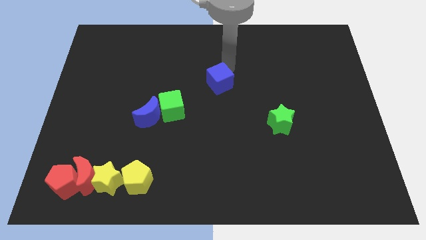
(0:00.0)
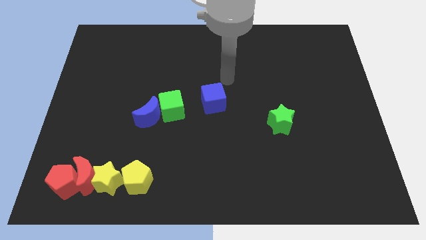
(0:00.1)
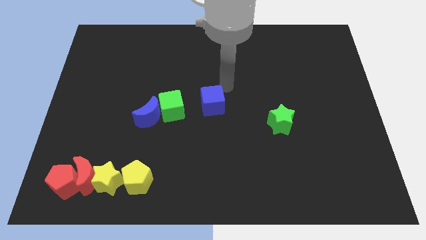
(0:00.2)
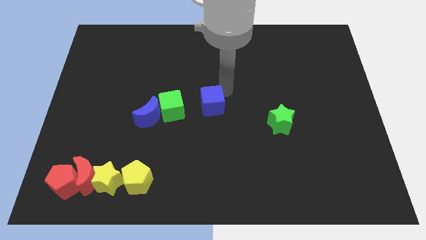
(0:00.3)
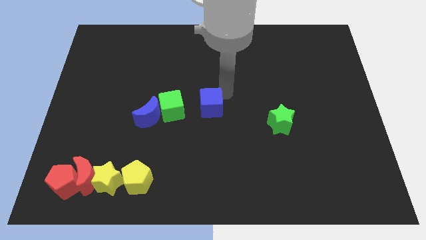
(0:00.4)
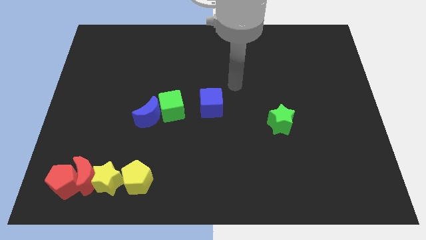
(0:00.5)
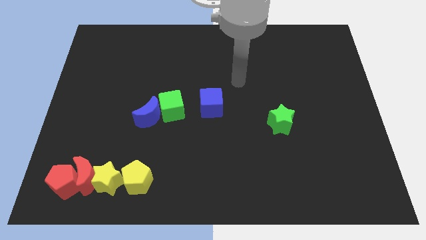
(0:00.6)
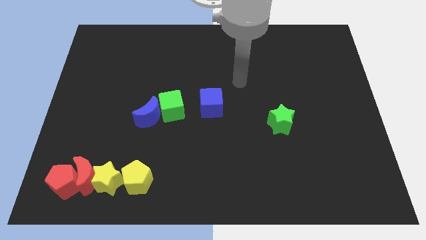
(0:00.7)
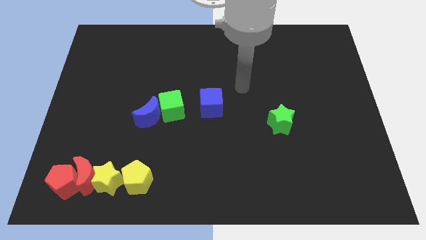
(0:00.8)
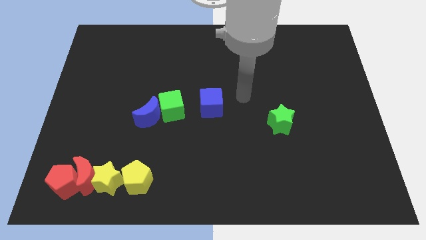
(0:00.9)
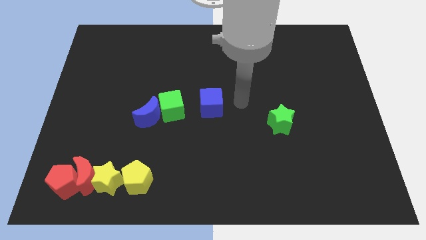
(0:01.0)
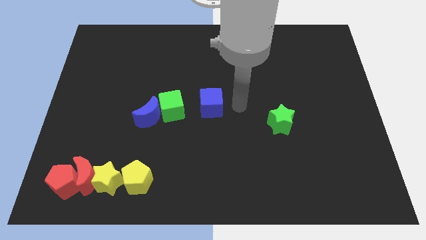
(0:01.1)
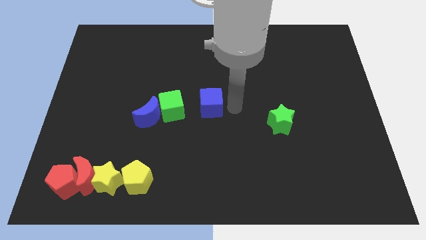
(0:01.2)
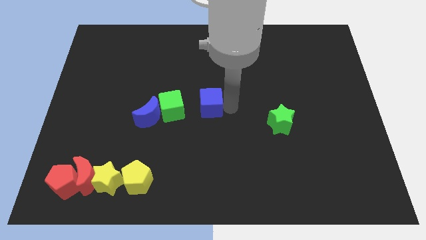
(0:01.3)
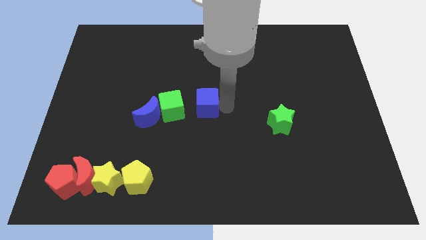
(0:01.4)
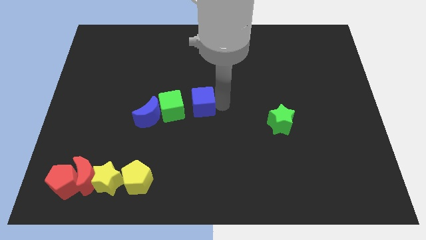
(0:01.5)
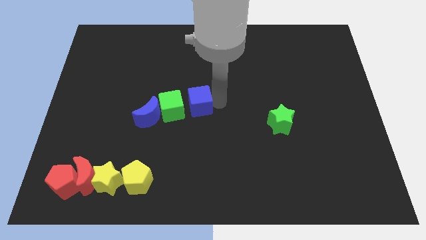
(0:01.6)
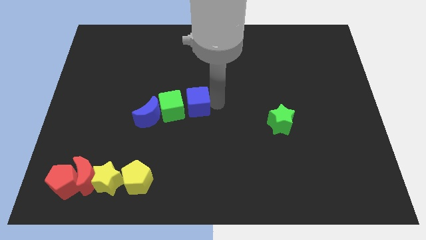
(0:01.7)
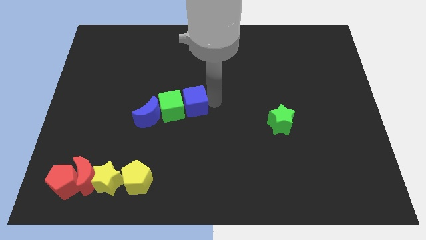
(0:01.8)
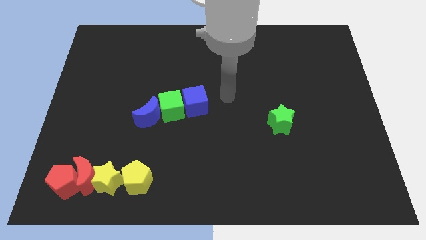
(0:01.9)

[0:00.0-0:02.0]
push the blue cube to the right of the green cube

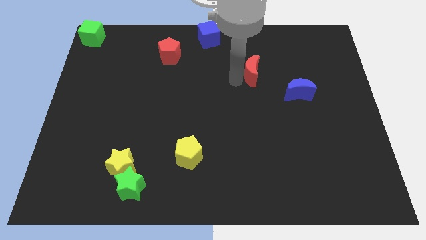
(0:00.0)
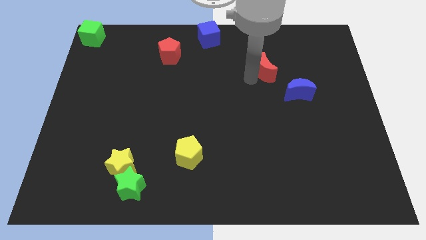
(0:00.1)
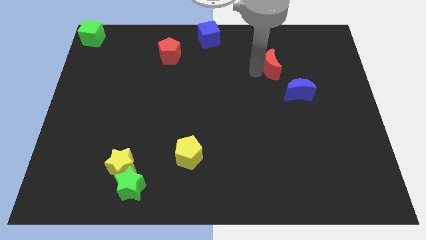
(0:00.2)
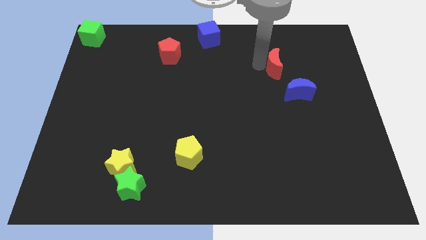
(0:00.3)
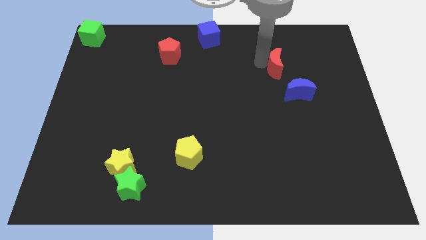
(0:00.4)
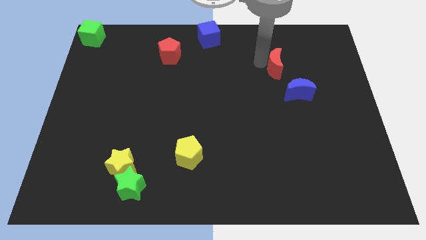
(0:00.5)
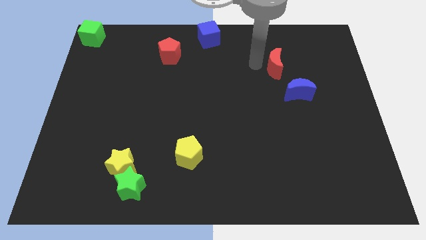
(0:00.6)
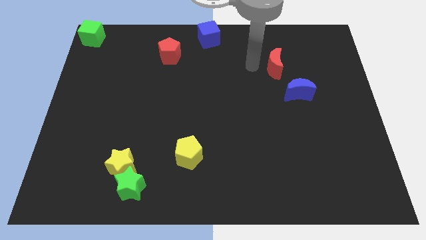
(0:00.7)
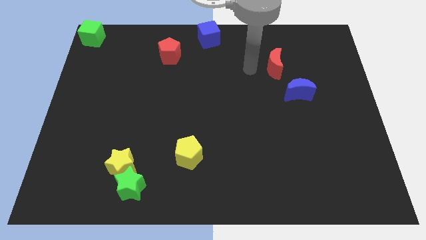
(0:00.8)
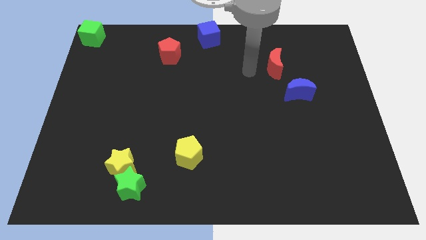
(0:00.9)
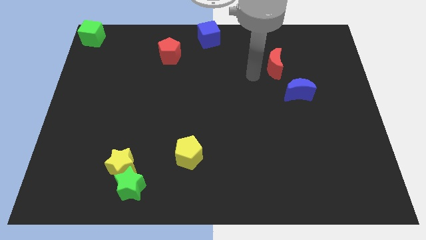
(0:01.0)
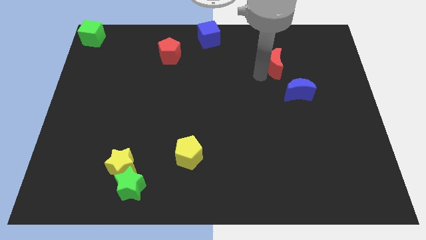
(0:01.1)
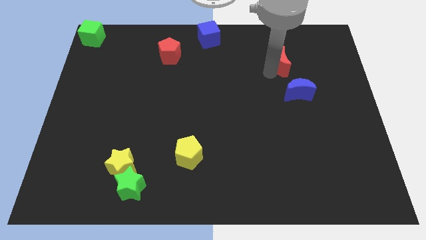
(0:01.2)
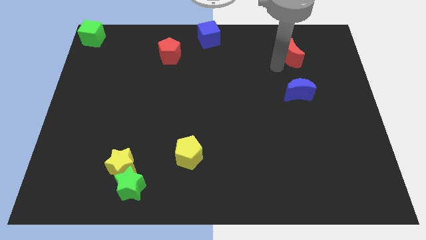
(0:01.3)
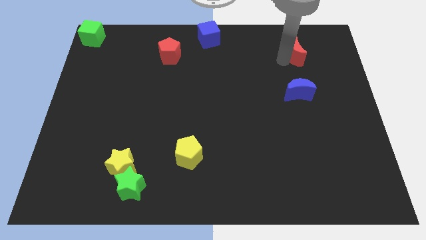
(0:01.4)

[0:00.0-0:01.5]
put the red moon above the blue moon

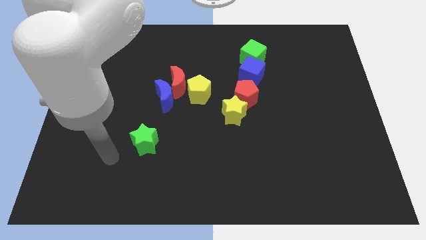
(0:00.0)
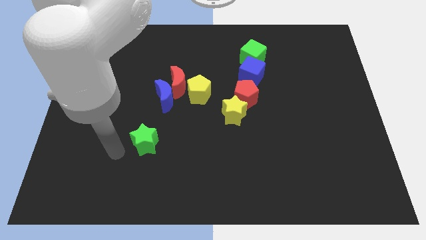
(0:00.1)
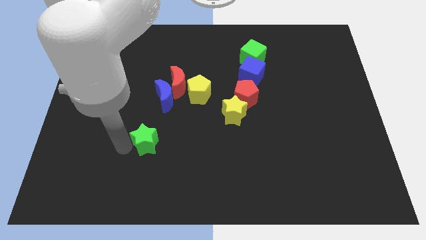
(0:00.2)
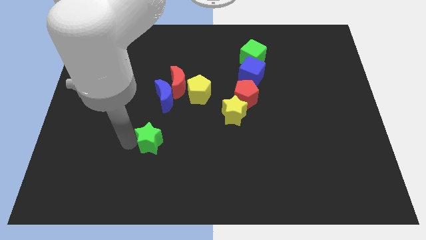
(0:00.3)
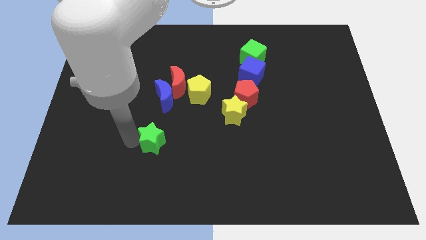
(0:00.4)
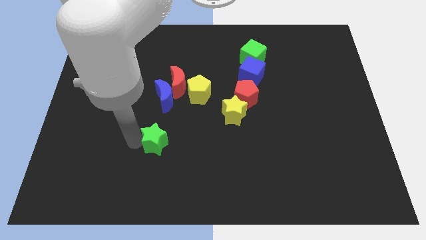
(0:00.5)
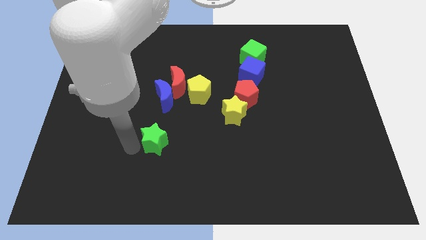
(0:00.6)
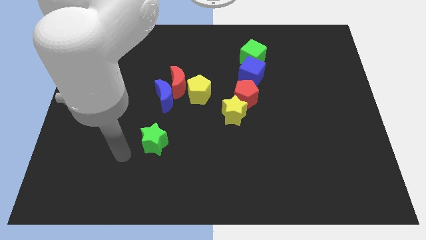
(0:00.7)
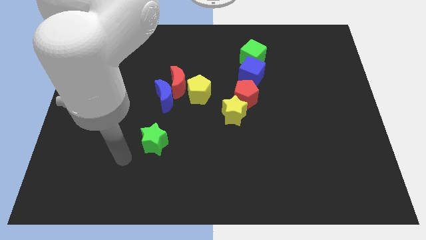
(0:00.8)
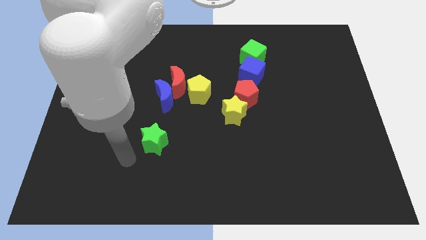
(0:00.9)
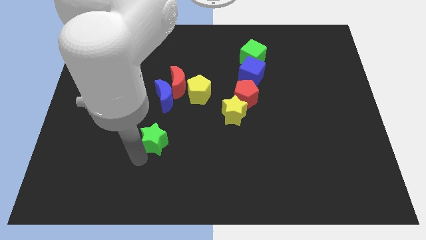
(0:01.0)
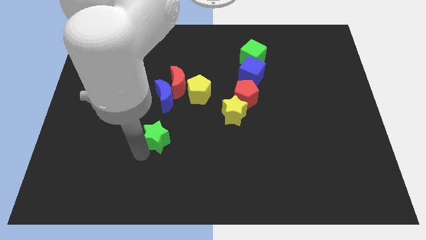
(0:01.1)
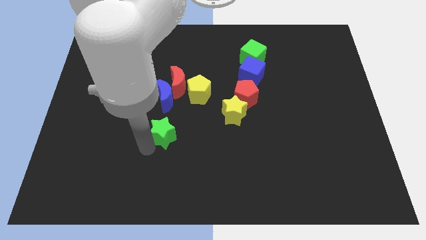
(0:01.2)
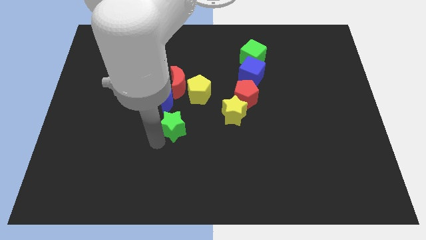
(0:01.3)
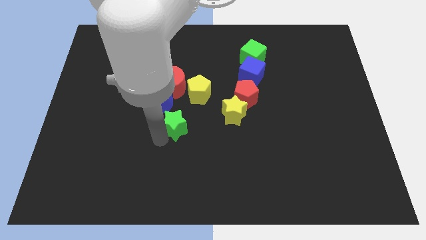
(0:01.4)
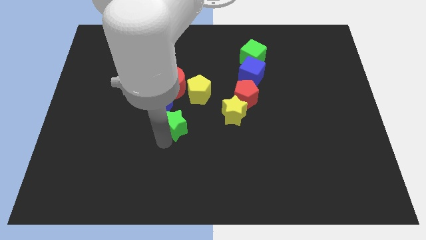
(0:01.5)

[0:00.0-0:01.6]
adjust the green star vertically below the red moon

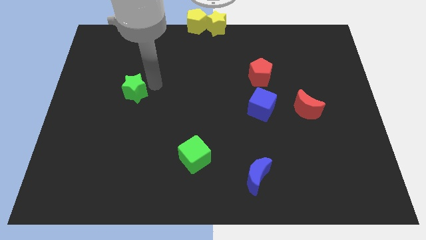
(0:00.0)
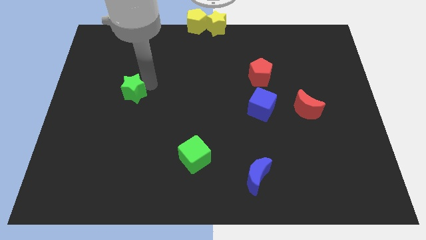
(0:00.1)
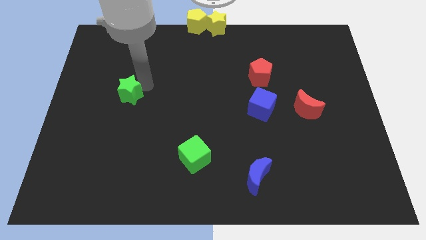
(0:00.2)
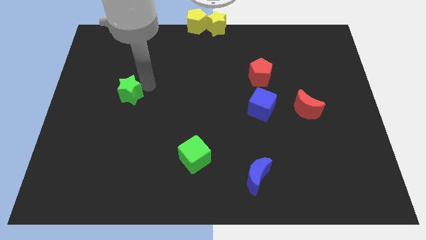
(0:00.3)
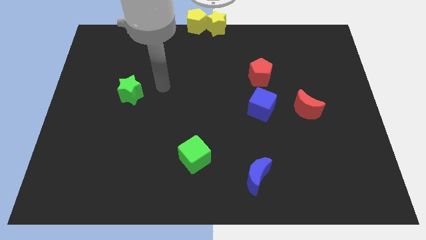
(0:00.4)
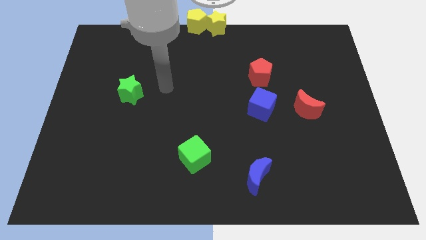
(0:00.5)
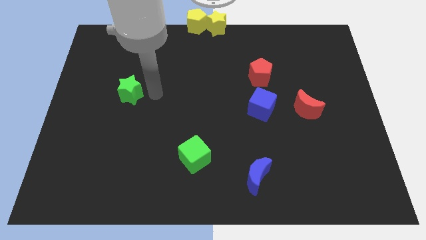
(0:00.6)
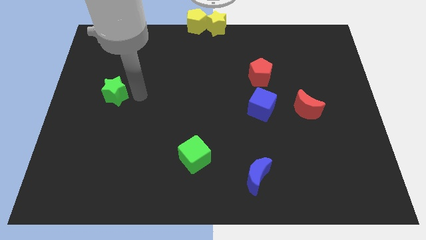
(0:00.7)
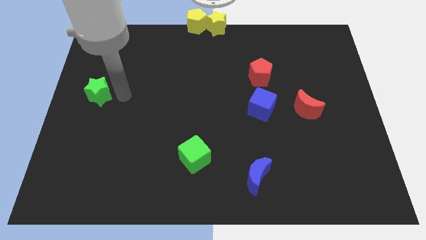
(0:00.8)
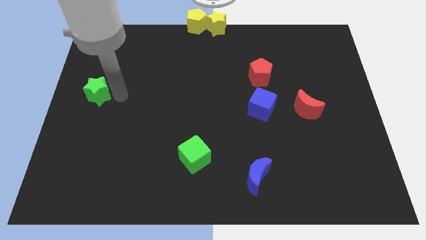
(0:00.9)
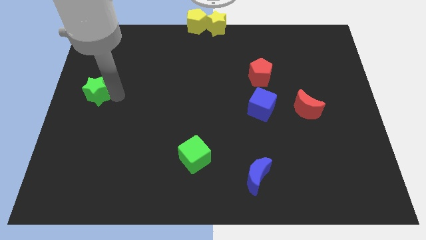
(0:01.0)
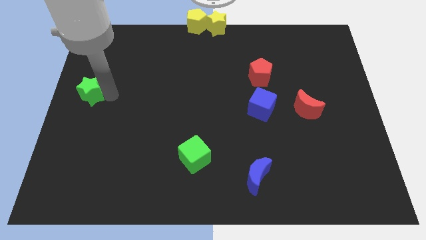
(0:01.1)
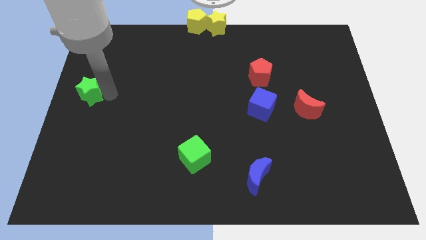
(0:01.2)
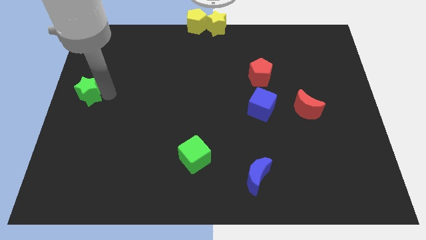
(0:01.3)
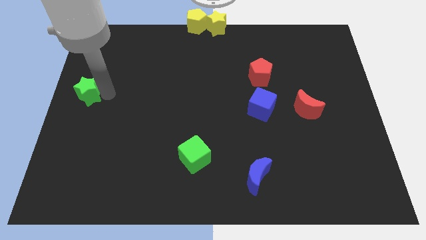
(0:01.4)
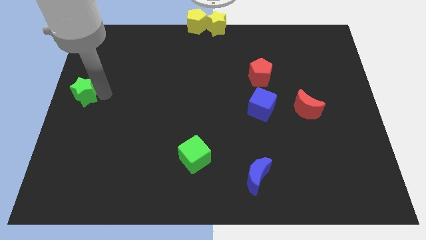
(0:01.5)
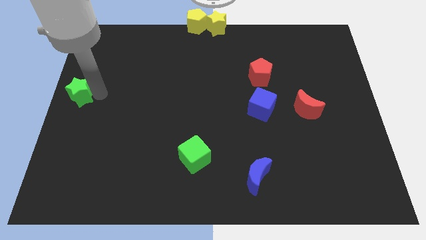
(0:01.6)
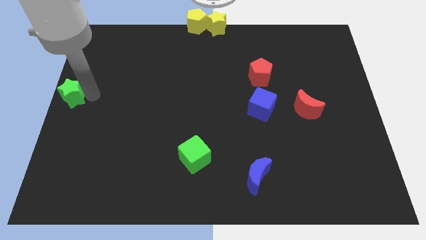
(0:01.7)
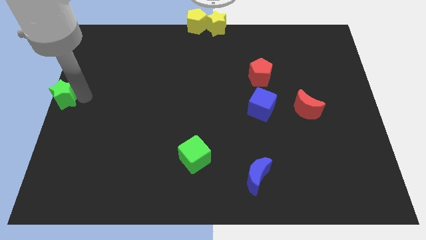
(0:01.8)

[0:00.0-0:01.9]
place the green star to the middle left of the board

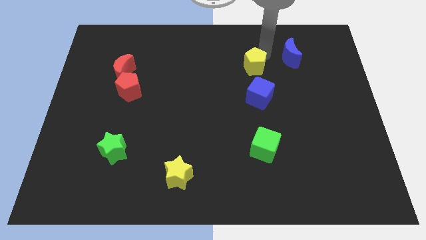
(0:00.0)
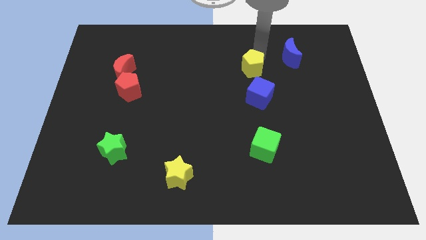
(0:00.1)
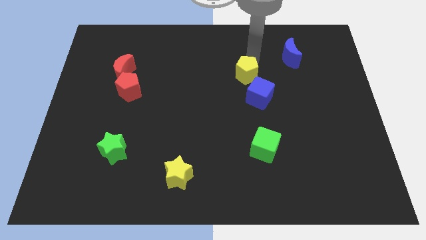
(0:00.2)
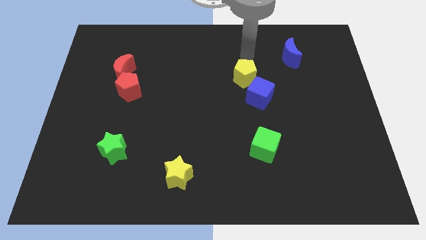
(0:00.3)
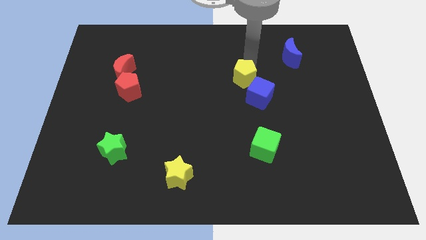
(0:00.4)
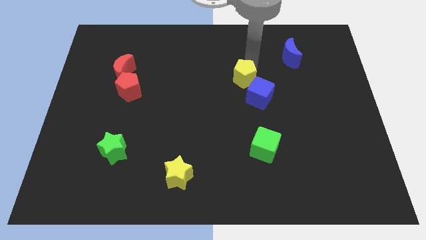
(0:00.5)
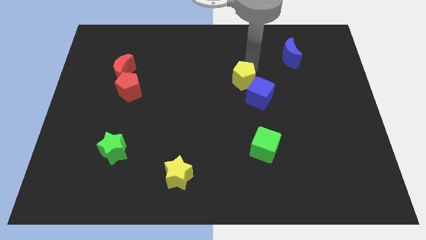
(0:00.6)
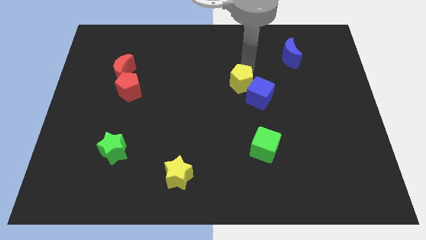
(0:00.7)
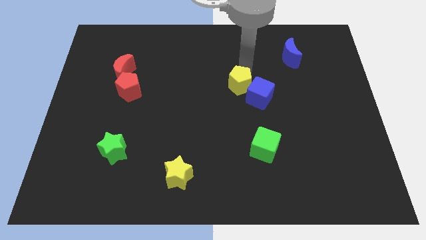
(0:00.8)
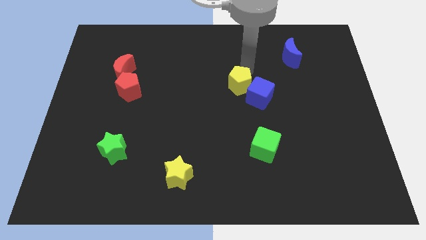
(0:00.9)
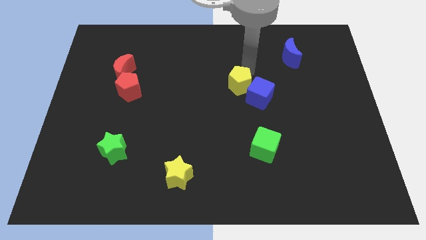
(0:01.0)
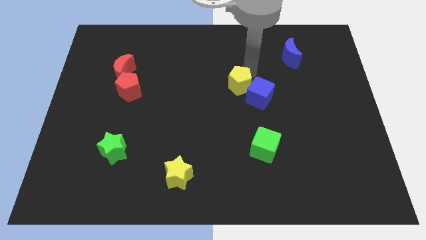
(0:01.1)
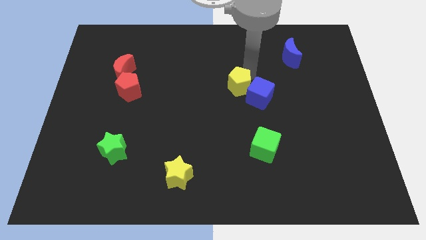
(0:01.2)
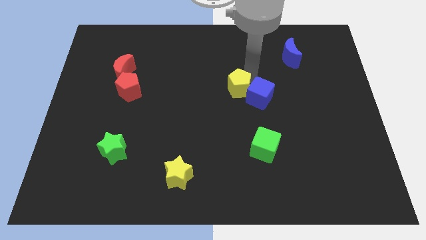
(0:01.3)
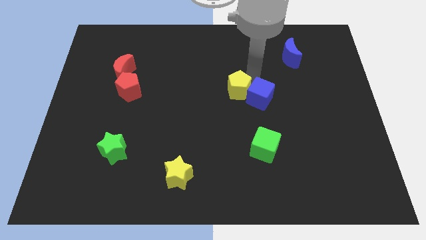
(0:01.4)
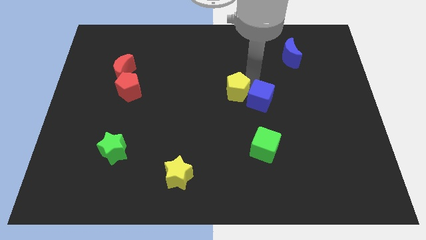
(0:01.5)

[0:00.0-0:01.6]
place yellow pentagon beside blue cube

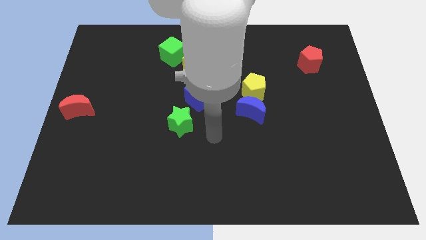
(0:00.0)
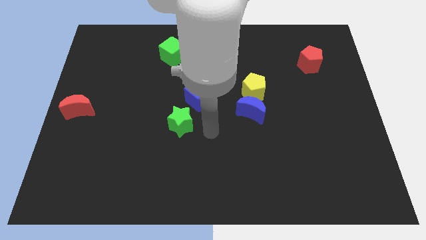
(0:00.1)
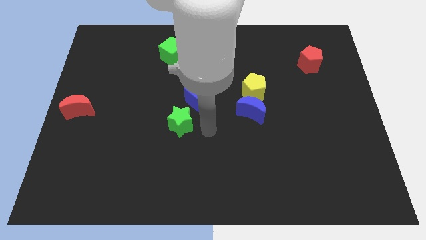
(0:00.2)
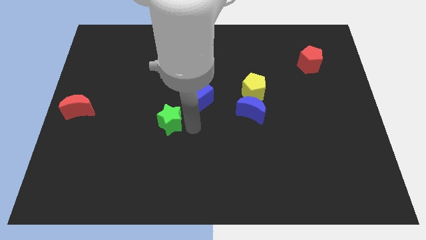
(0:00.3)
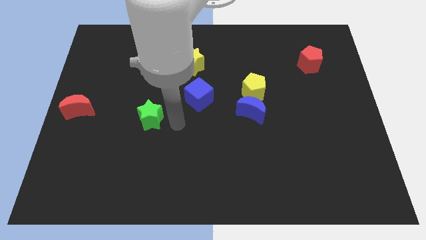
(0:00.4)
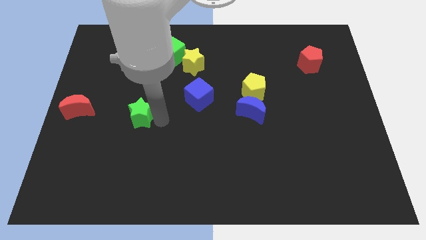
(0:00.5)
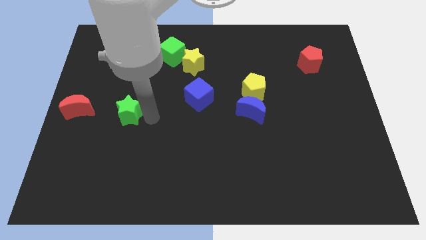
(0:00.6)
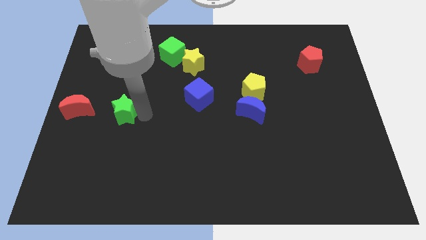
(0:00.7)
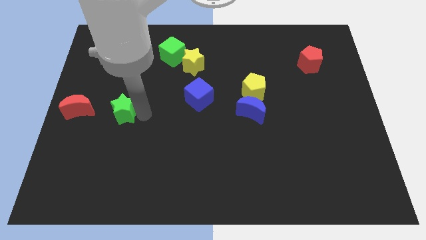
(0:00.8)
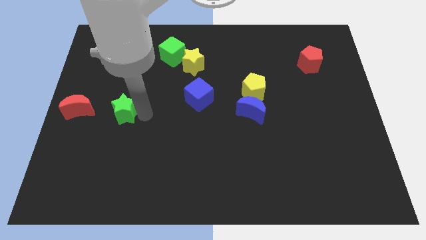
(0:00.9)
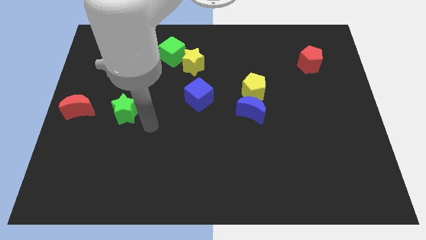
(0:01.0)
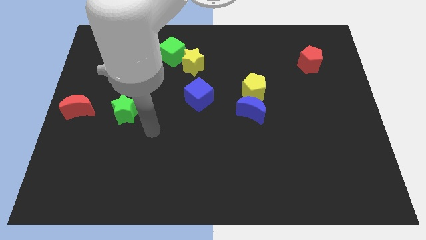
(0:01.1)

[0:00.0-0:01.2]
push green star to the right of red moon
